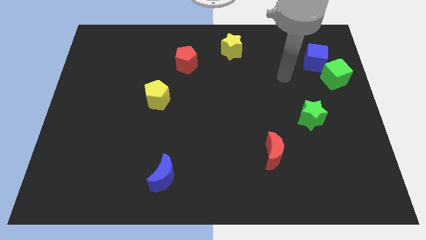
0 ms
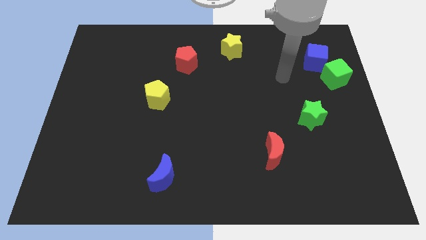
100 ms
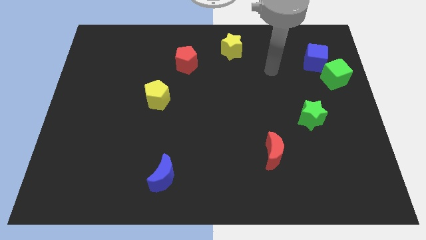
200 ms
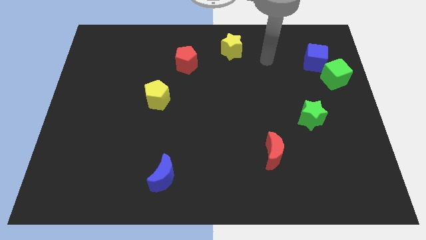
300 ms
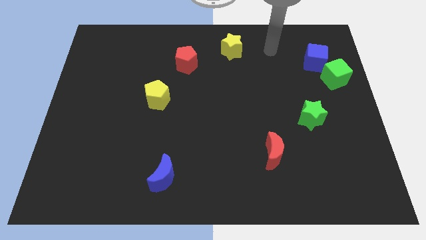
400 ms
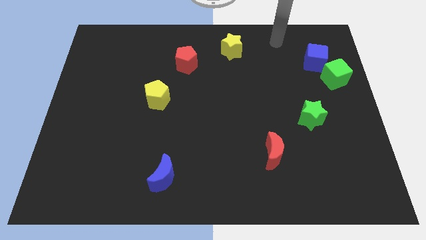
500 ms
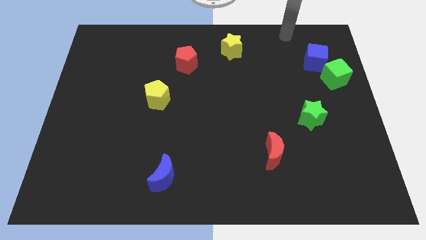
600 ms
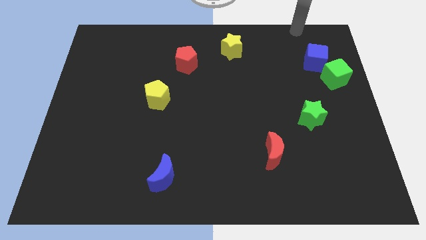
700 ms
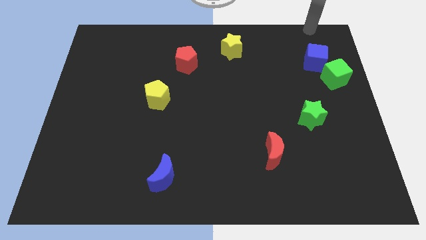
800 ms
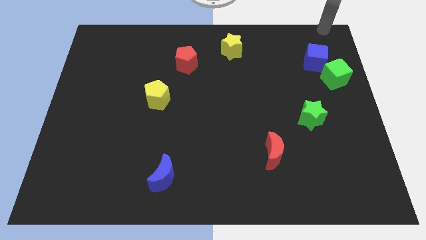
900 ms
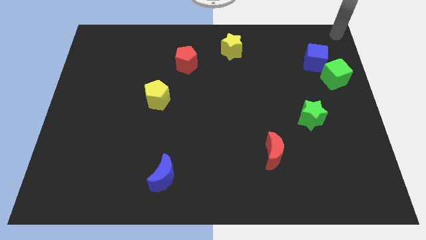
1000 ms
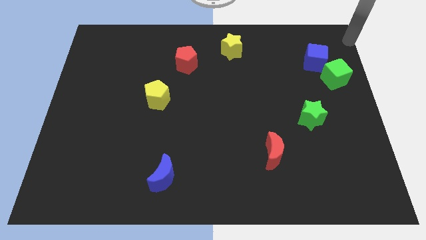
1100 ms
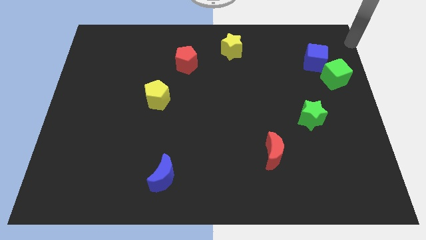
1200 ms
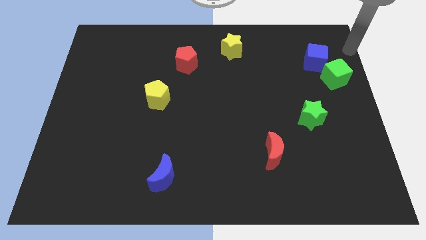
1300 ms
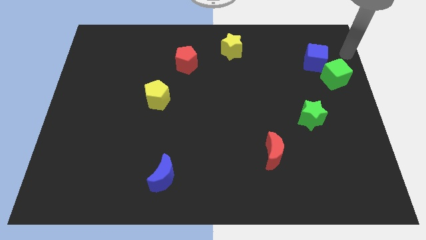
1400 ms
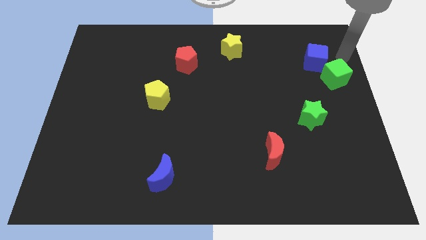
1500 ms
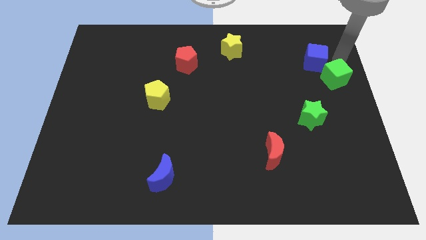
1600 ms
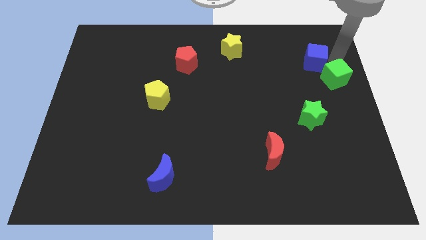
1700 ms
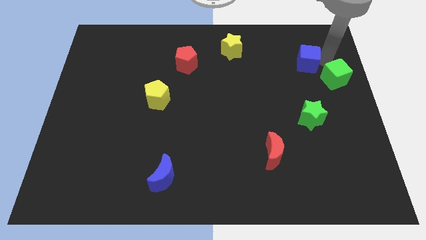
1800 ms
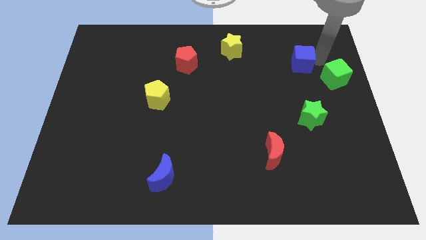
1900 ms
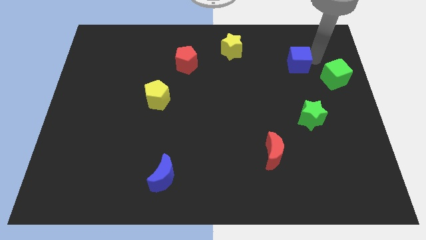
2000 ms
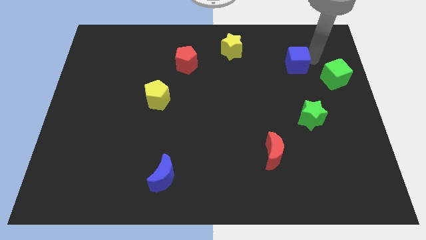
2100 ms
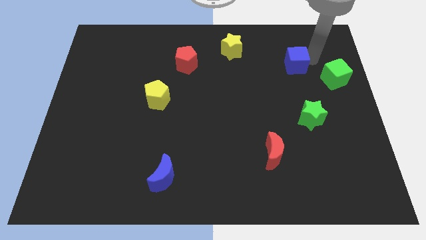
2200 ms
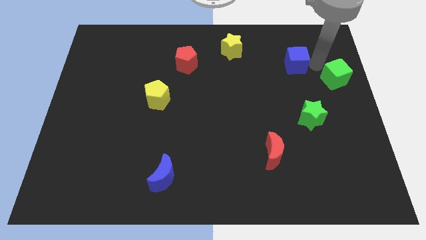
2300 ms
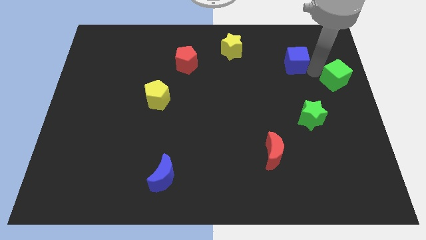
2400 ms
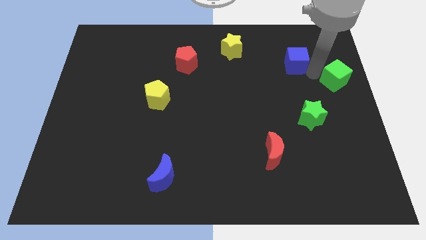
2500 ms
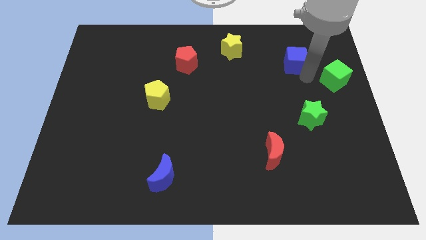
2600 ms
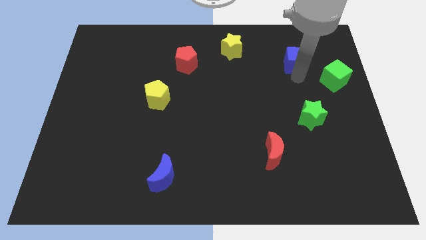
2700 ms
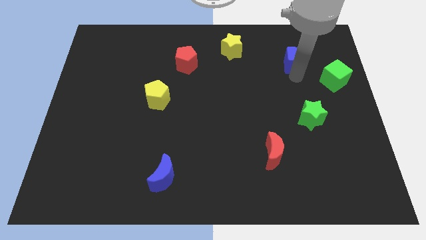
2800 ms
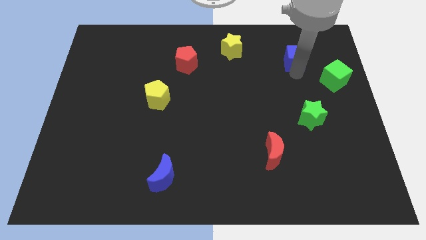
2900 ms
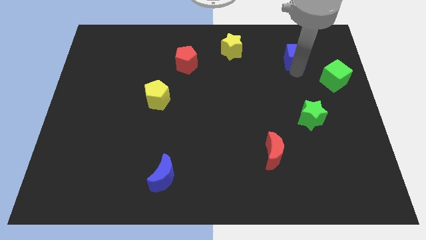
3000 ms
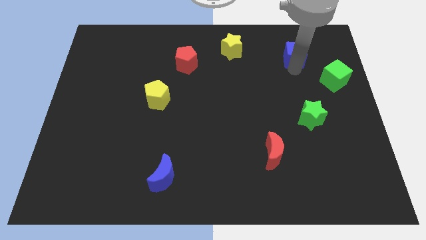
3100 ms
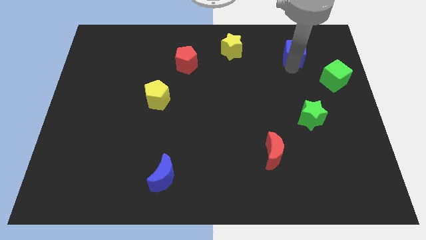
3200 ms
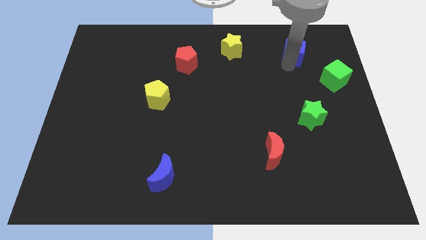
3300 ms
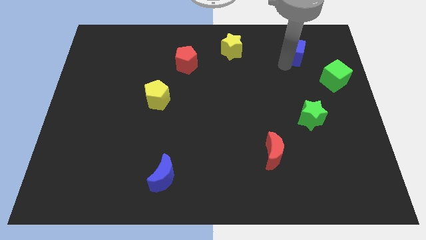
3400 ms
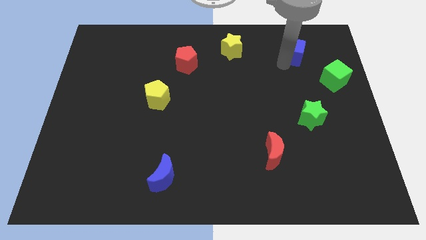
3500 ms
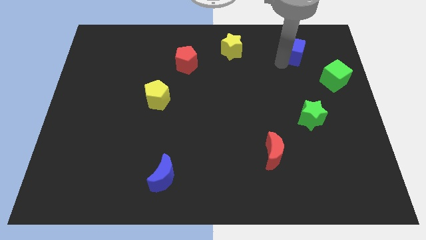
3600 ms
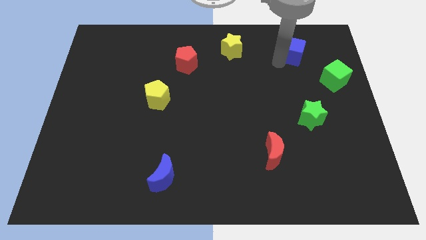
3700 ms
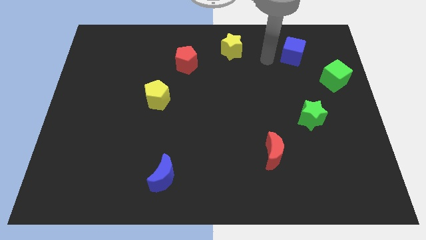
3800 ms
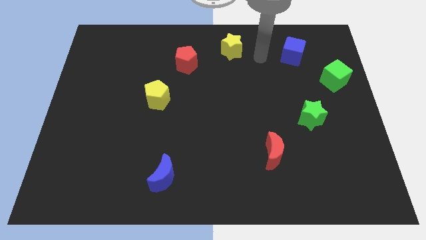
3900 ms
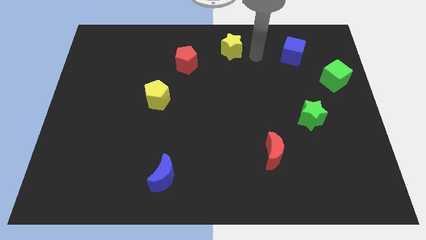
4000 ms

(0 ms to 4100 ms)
separate the blue cube and the green cube

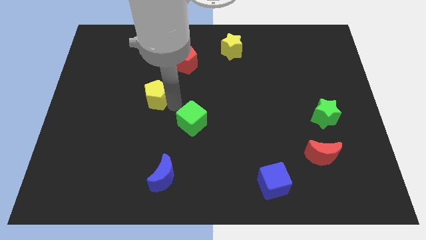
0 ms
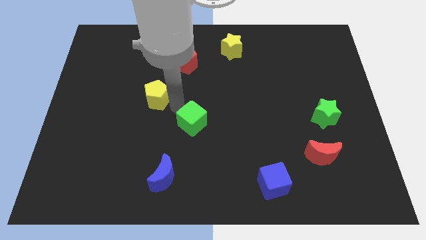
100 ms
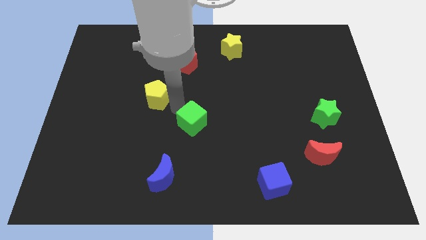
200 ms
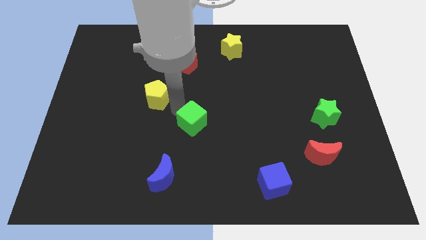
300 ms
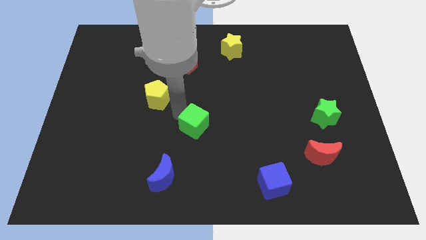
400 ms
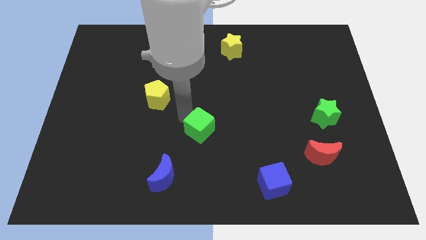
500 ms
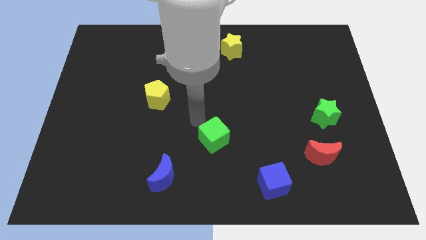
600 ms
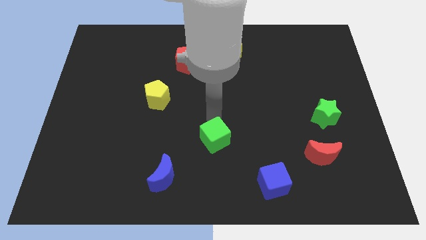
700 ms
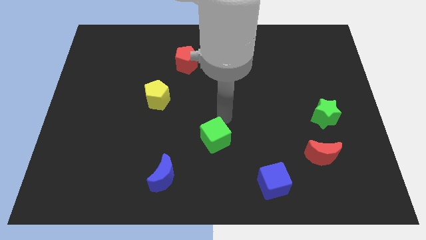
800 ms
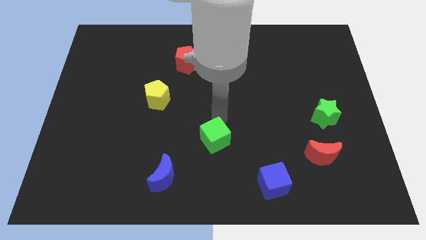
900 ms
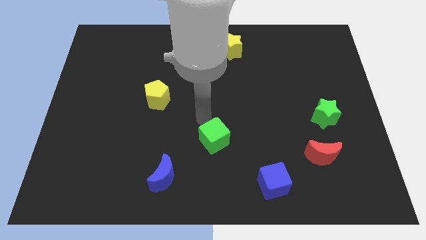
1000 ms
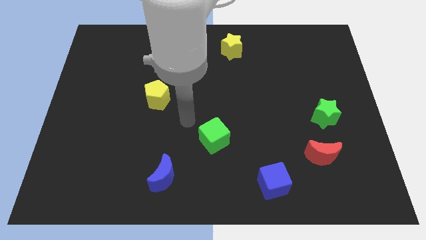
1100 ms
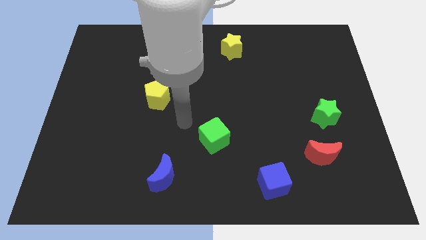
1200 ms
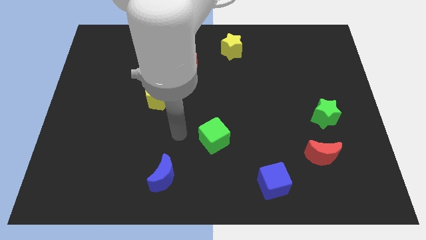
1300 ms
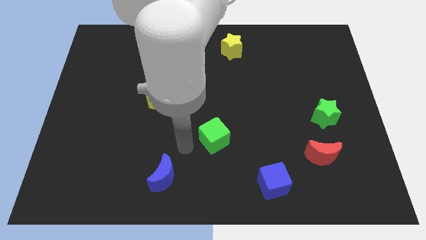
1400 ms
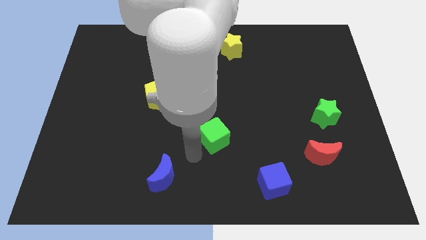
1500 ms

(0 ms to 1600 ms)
move the green cube towards the blue cube

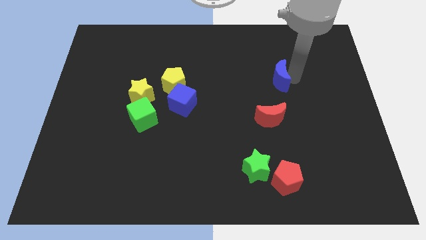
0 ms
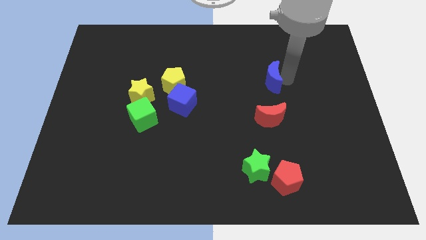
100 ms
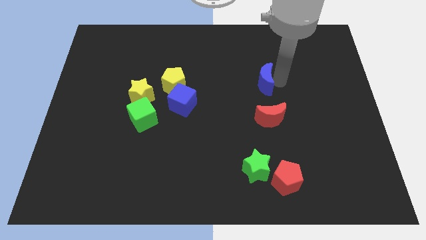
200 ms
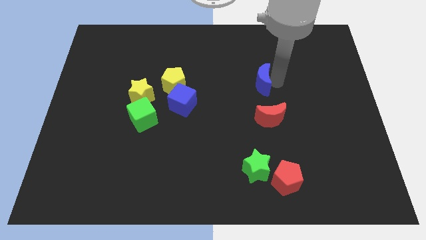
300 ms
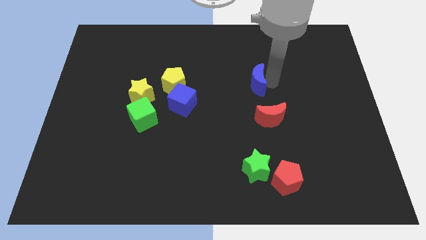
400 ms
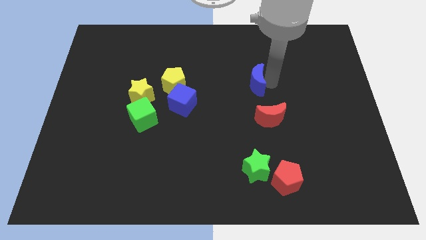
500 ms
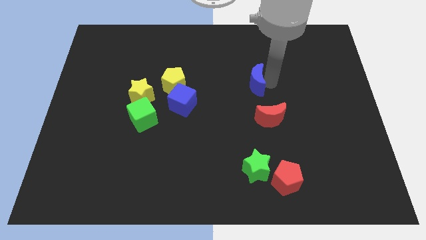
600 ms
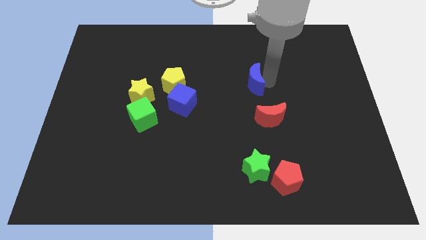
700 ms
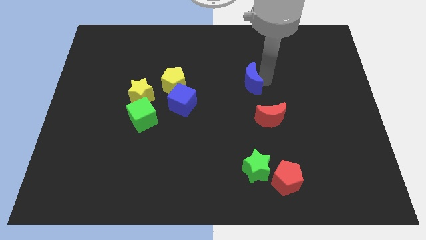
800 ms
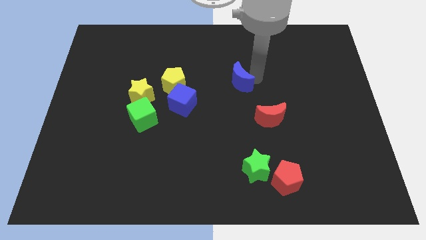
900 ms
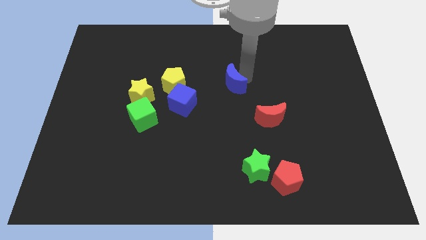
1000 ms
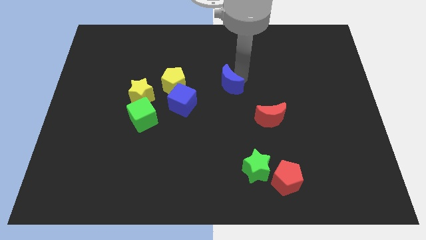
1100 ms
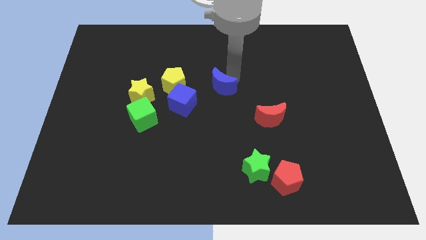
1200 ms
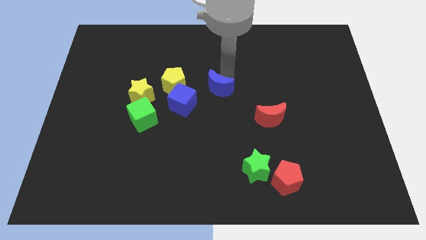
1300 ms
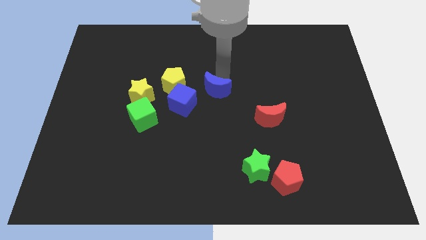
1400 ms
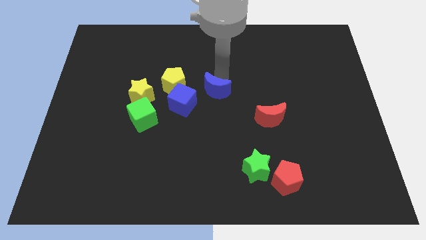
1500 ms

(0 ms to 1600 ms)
place the blue moon beside the blue cube

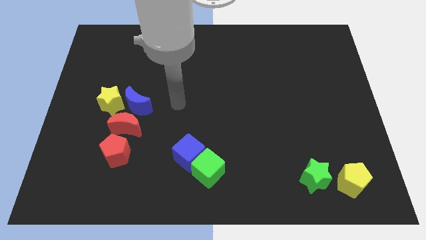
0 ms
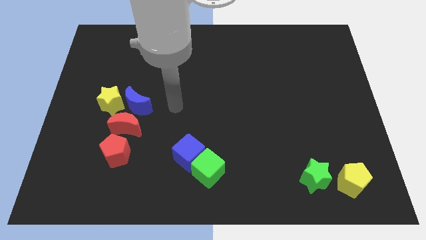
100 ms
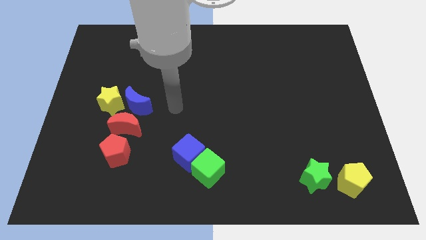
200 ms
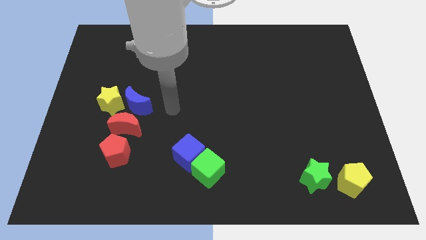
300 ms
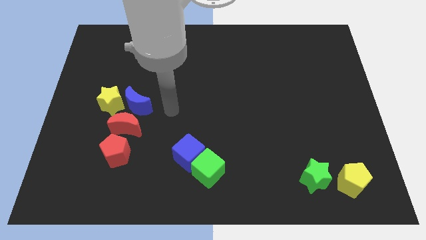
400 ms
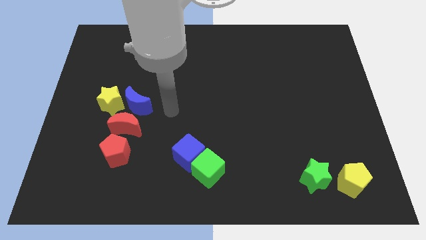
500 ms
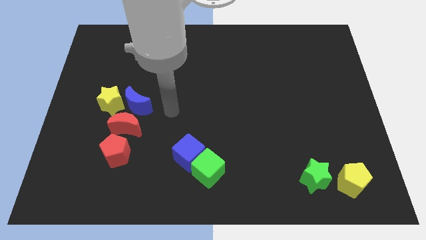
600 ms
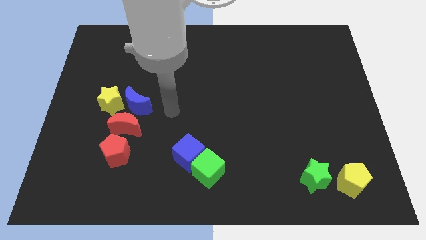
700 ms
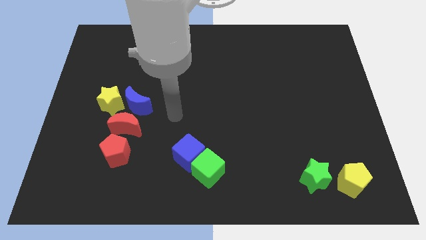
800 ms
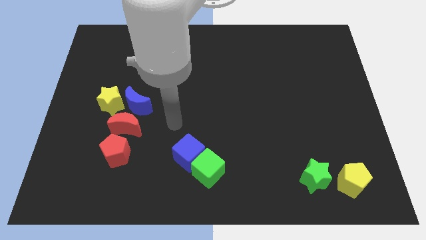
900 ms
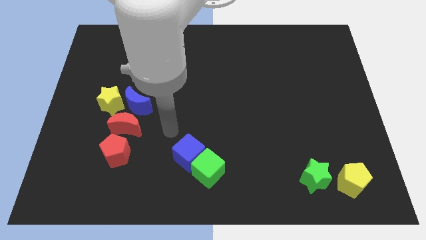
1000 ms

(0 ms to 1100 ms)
push arm in between blue blocks

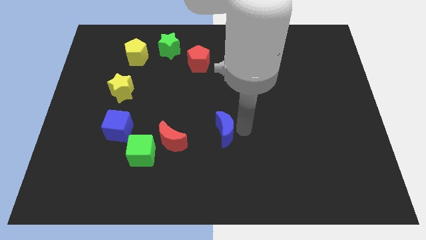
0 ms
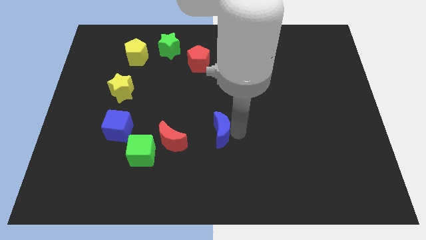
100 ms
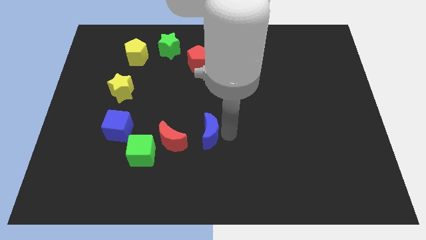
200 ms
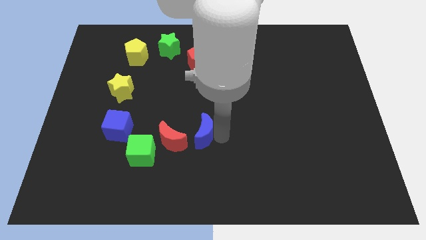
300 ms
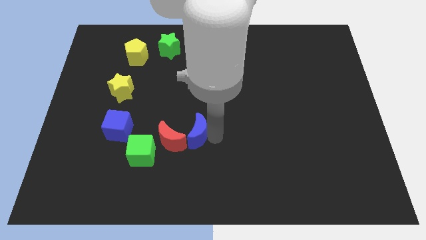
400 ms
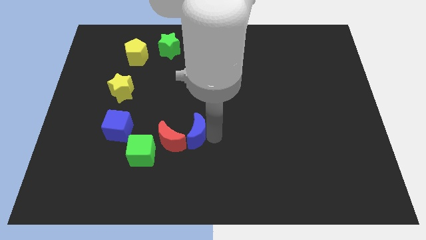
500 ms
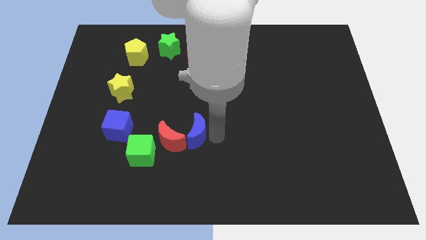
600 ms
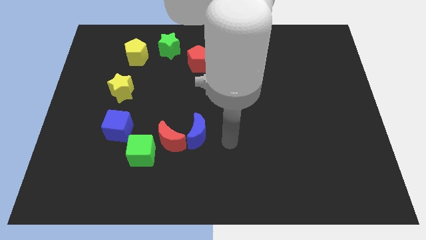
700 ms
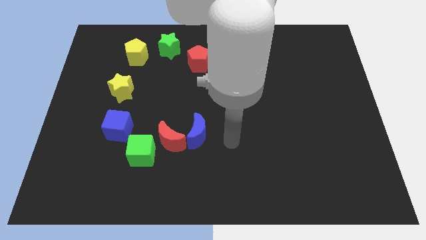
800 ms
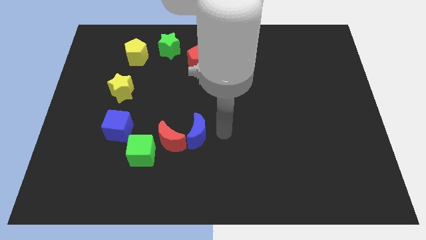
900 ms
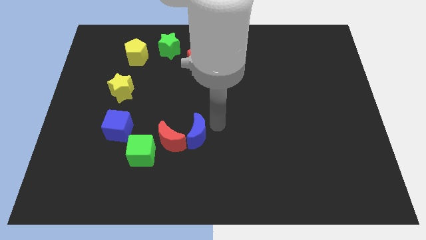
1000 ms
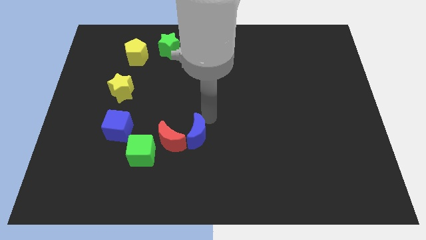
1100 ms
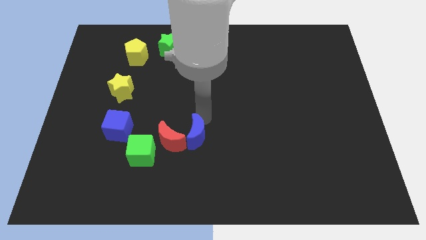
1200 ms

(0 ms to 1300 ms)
push the blue crescent close to the red crescent
